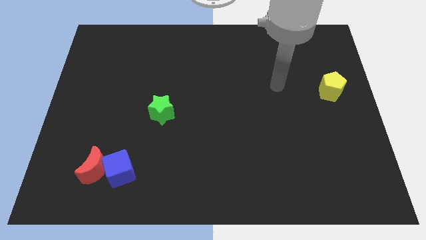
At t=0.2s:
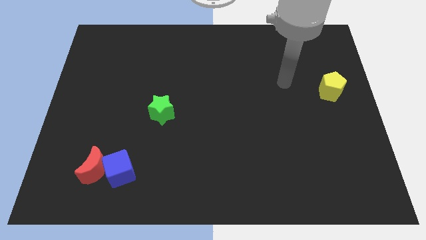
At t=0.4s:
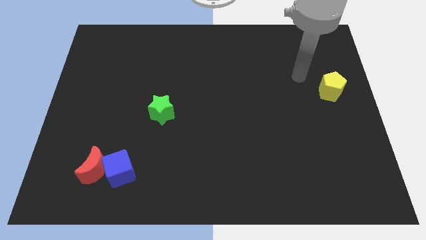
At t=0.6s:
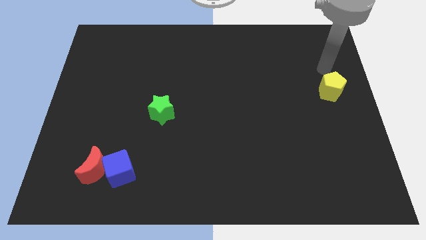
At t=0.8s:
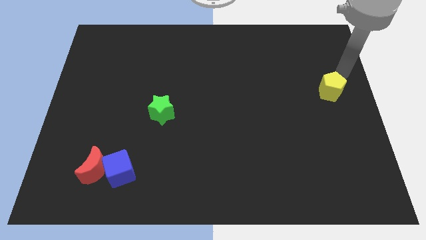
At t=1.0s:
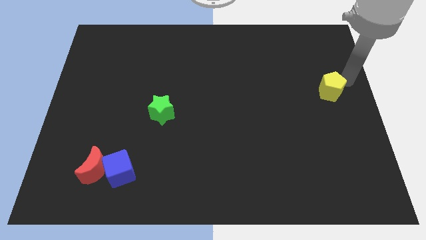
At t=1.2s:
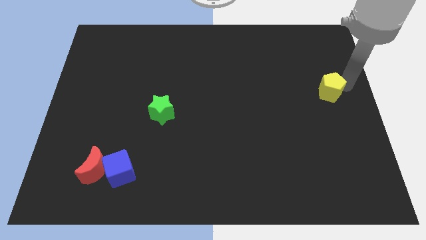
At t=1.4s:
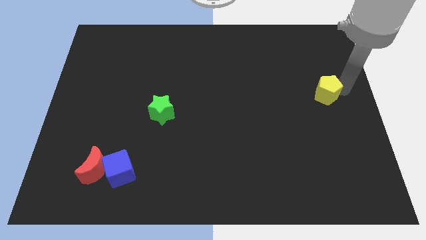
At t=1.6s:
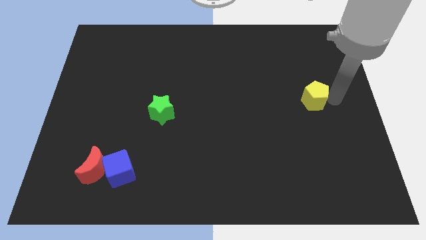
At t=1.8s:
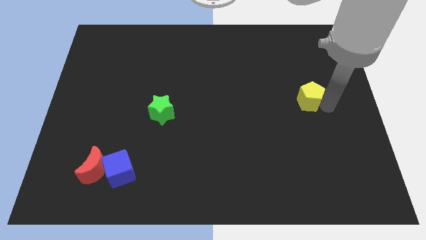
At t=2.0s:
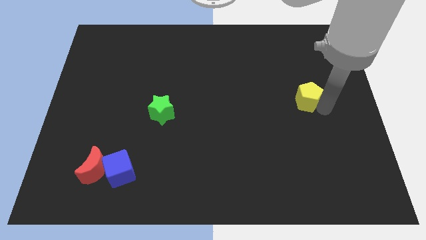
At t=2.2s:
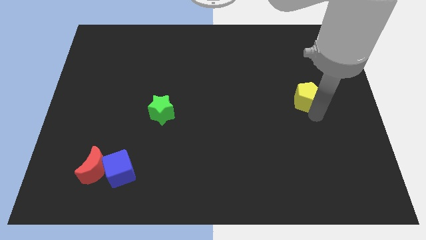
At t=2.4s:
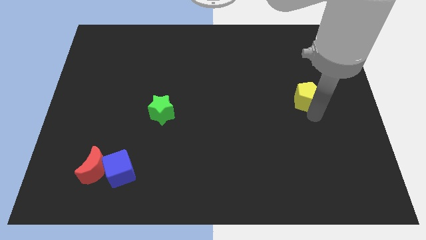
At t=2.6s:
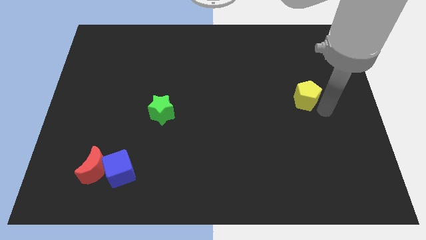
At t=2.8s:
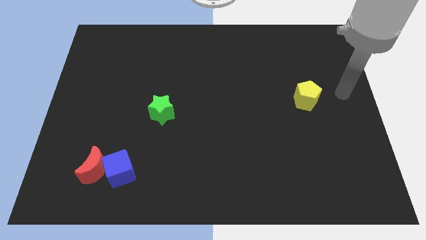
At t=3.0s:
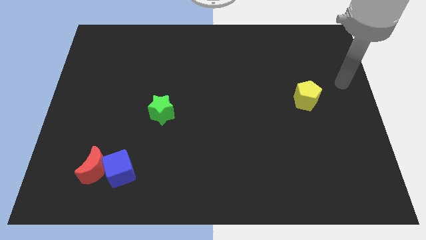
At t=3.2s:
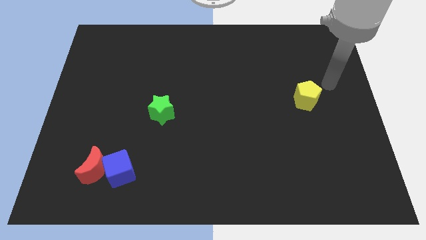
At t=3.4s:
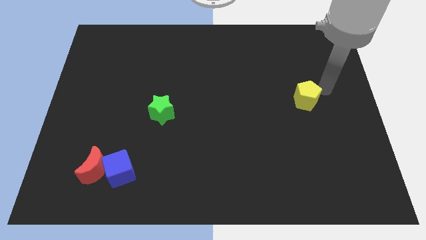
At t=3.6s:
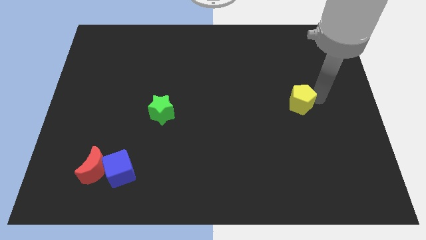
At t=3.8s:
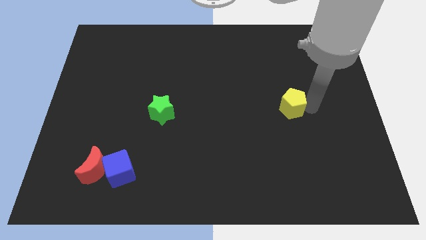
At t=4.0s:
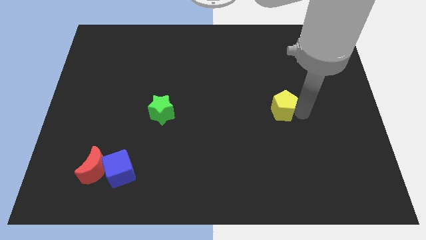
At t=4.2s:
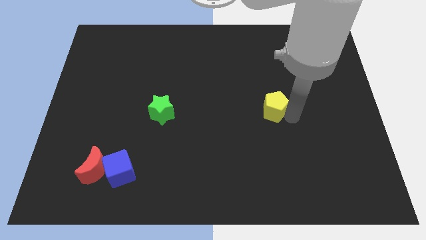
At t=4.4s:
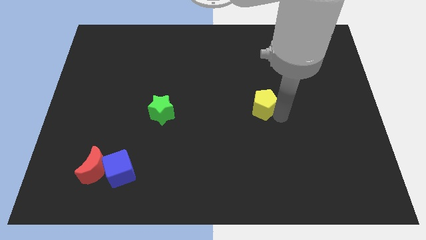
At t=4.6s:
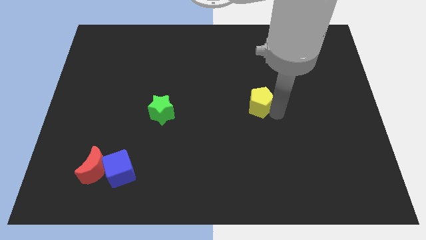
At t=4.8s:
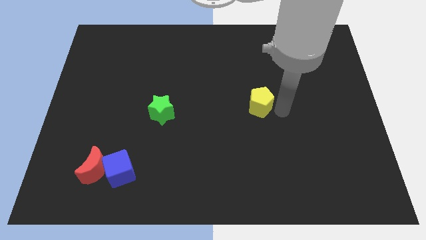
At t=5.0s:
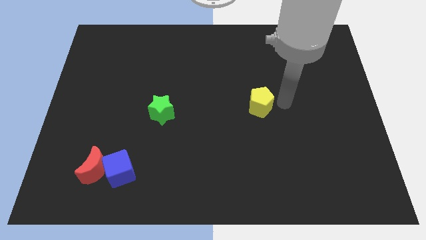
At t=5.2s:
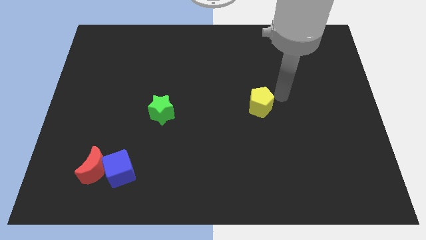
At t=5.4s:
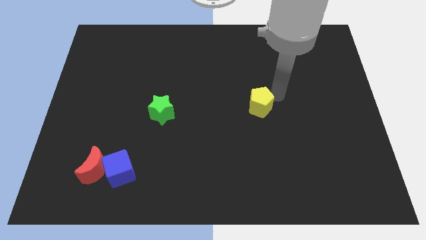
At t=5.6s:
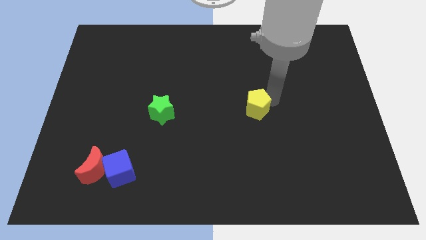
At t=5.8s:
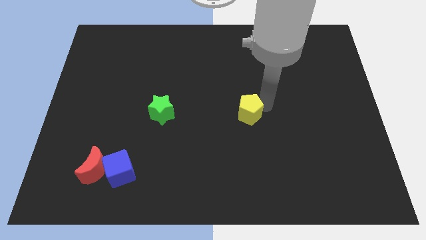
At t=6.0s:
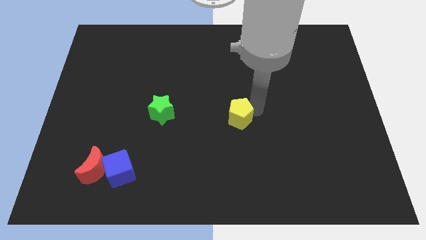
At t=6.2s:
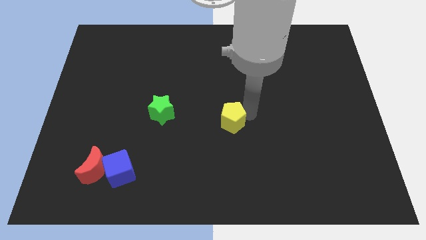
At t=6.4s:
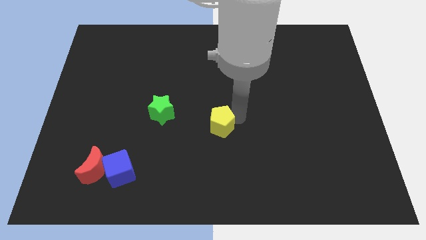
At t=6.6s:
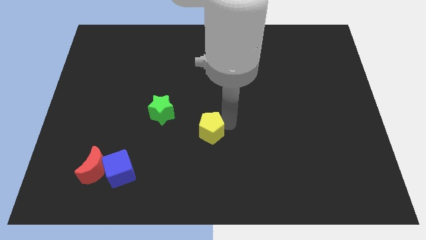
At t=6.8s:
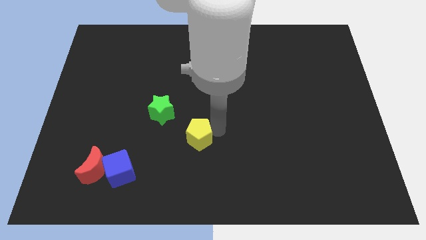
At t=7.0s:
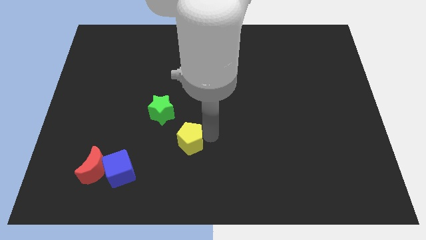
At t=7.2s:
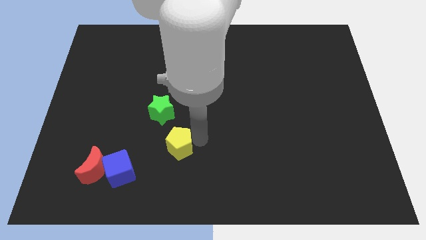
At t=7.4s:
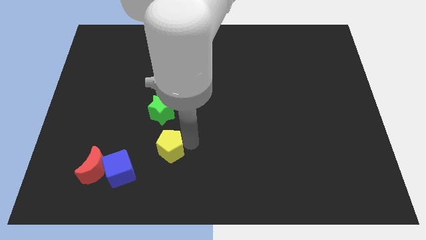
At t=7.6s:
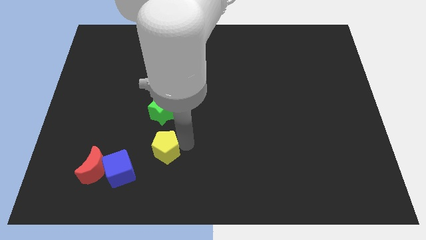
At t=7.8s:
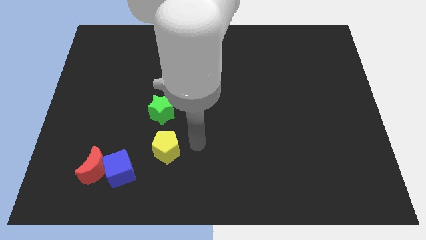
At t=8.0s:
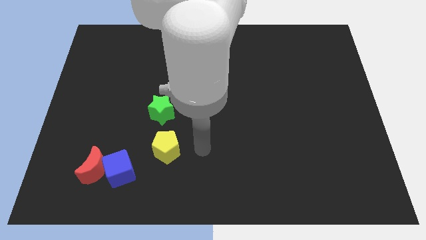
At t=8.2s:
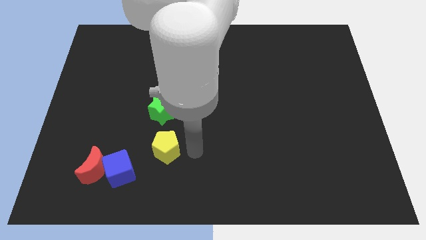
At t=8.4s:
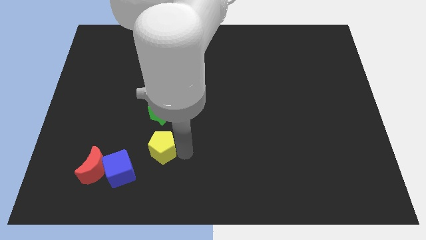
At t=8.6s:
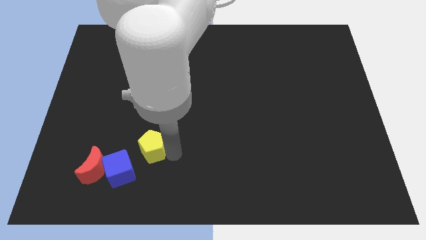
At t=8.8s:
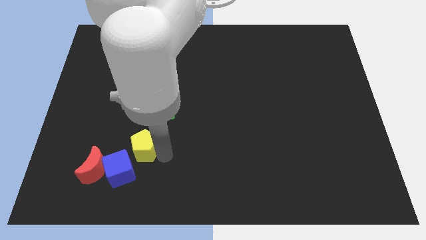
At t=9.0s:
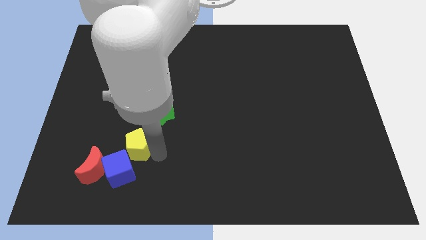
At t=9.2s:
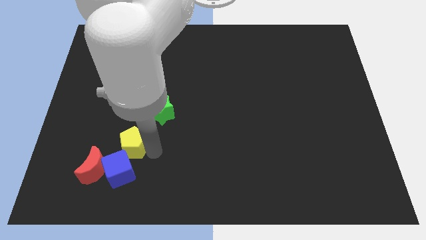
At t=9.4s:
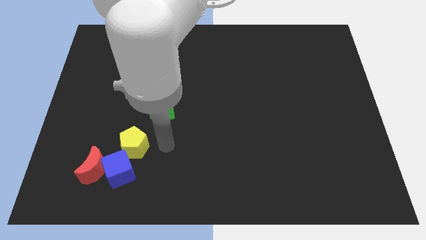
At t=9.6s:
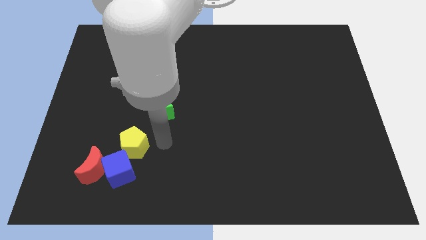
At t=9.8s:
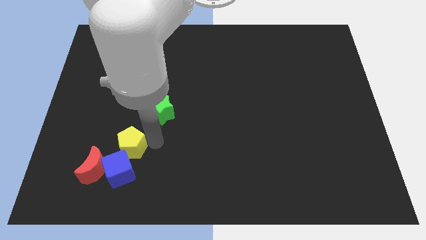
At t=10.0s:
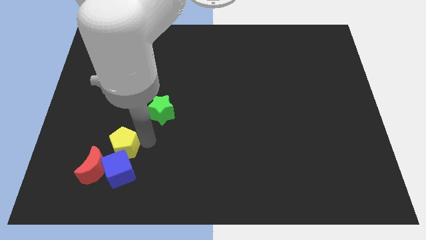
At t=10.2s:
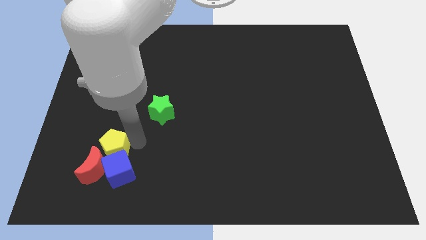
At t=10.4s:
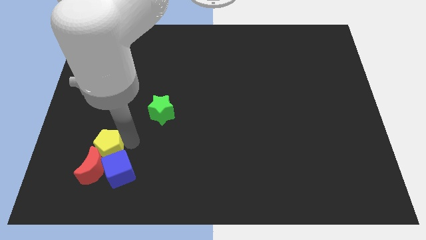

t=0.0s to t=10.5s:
push the yellow block close to the moon

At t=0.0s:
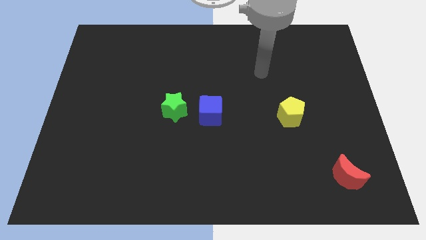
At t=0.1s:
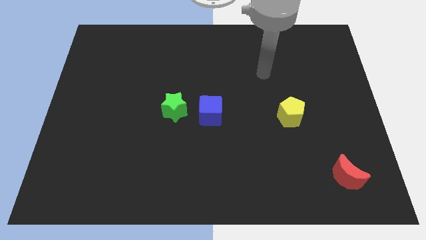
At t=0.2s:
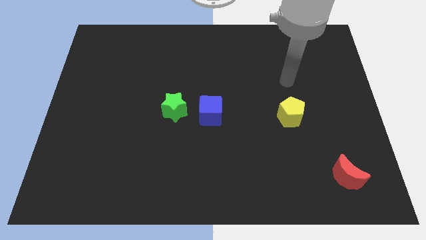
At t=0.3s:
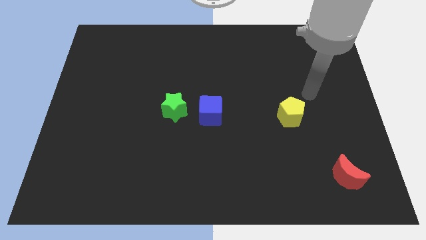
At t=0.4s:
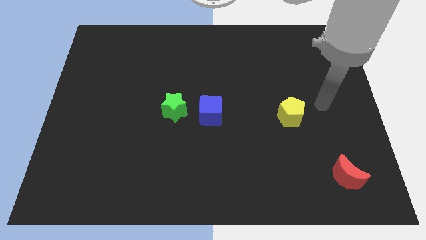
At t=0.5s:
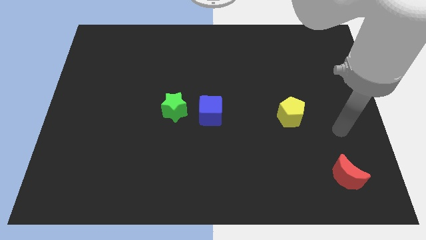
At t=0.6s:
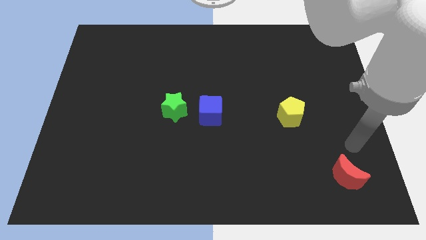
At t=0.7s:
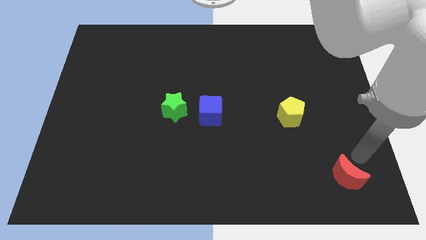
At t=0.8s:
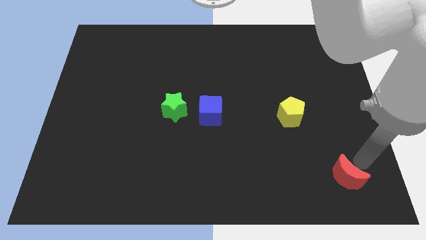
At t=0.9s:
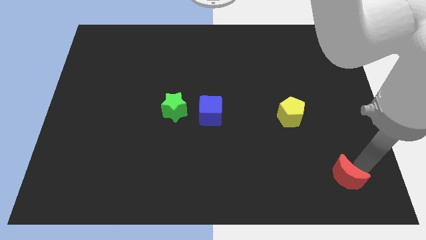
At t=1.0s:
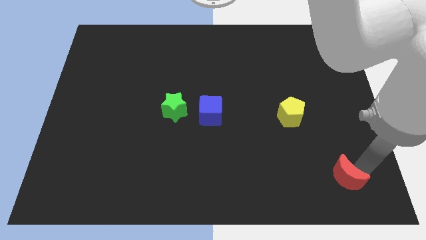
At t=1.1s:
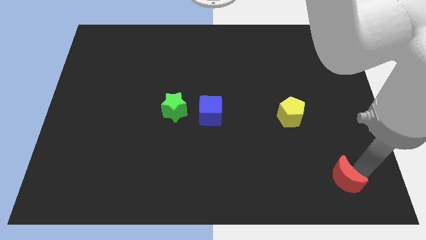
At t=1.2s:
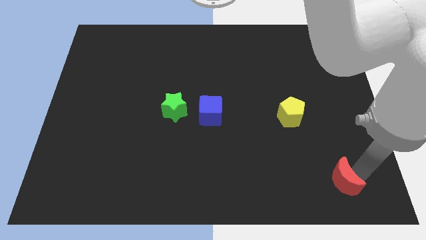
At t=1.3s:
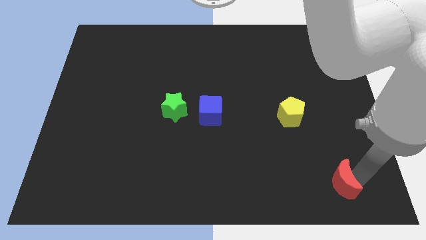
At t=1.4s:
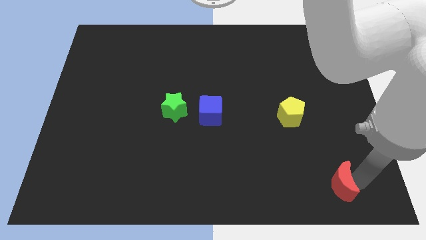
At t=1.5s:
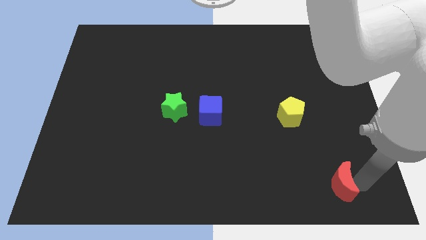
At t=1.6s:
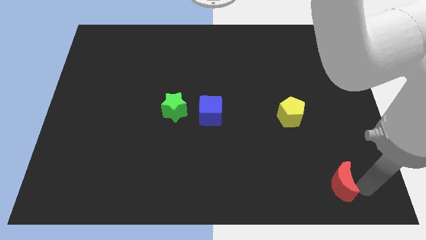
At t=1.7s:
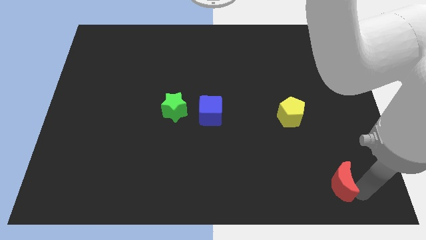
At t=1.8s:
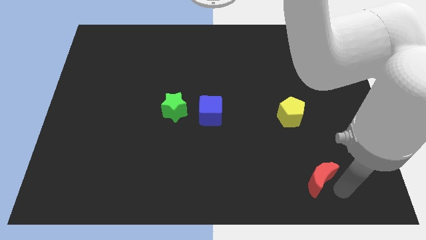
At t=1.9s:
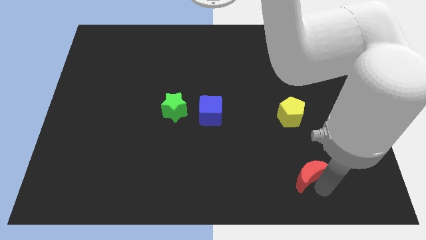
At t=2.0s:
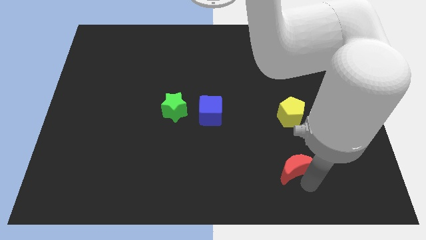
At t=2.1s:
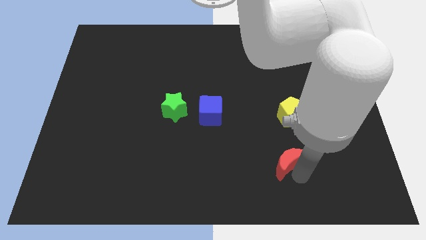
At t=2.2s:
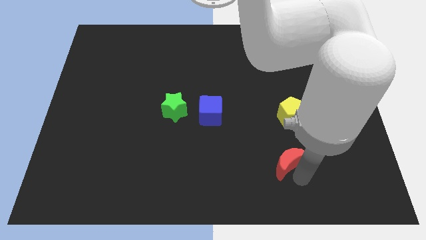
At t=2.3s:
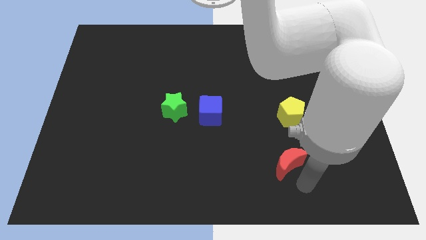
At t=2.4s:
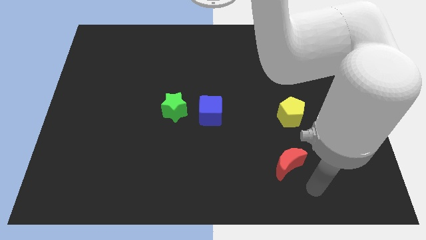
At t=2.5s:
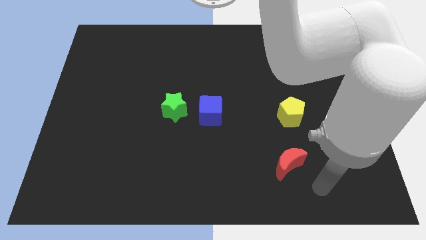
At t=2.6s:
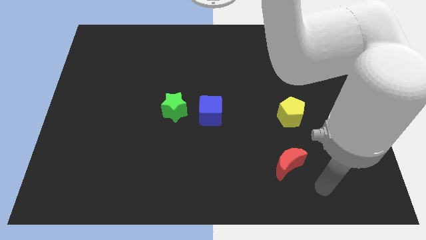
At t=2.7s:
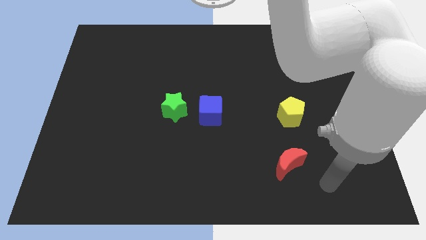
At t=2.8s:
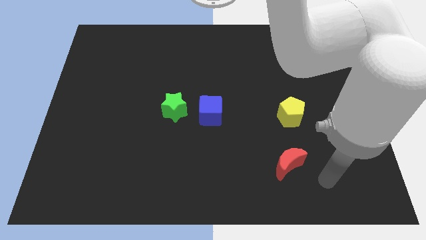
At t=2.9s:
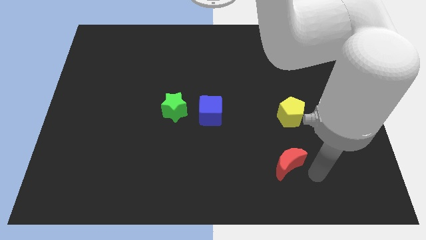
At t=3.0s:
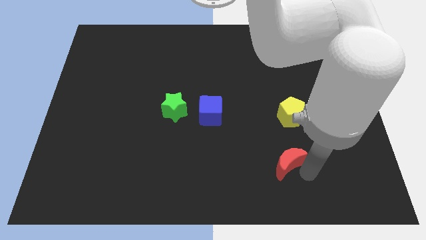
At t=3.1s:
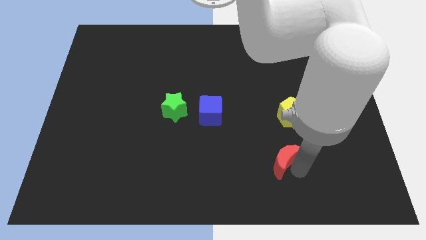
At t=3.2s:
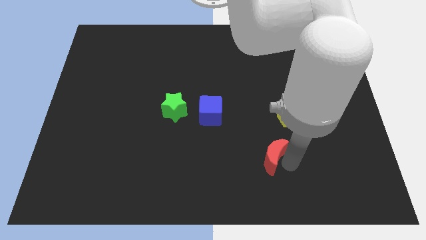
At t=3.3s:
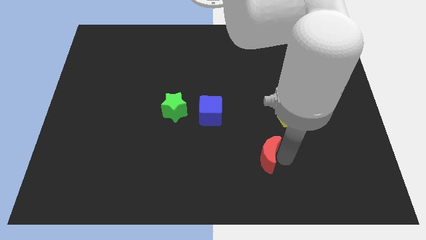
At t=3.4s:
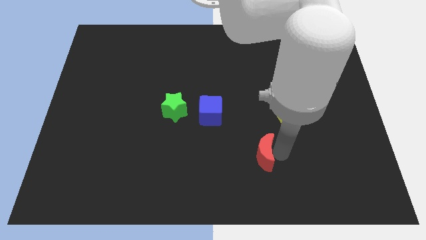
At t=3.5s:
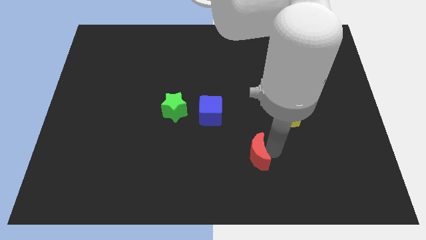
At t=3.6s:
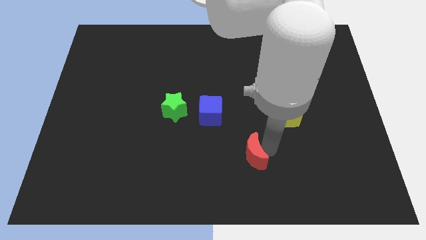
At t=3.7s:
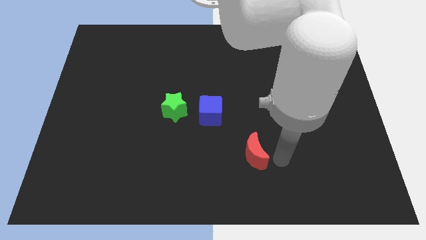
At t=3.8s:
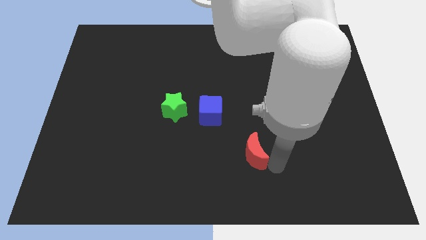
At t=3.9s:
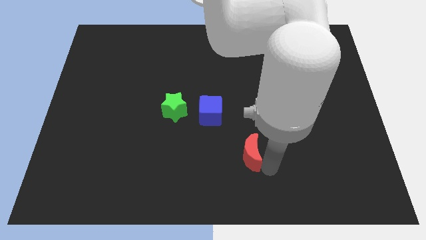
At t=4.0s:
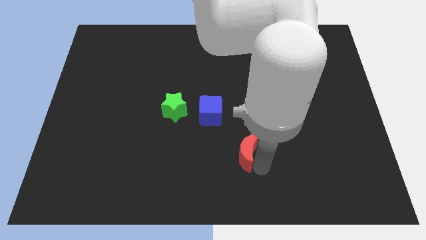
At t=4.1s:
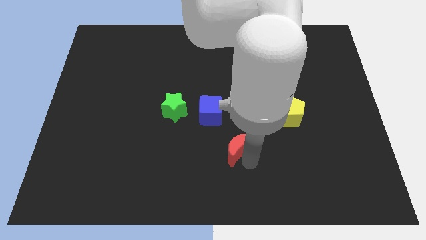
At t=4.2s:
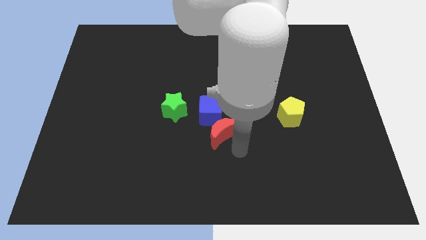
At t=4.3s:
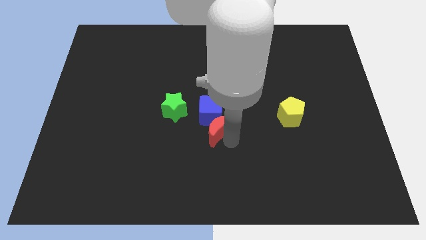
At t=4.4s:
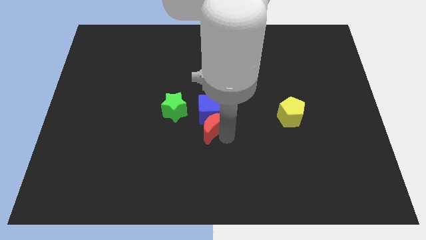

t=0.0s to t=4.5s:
move the red moon towards the blue block
